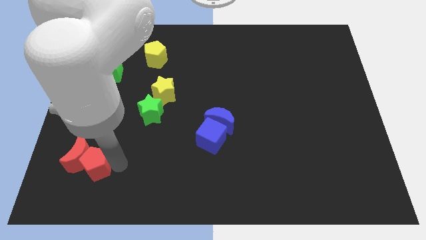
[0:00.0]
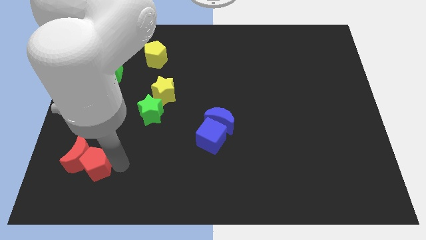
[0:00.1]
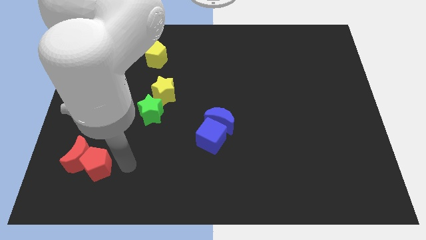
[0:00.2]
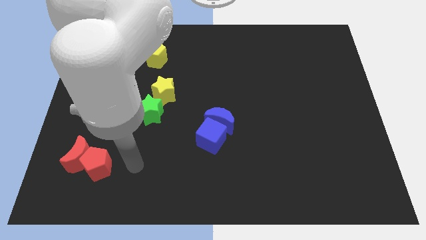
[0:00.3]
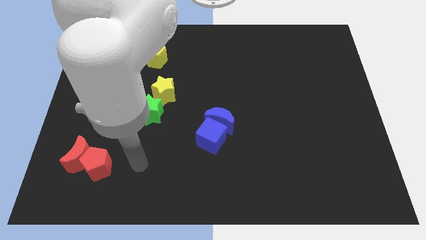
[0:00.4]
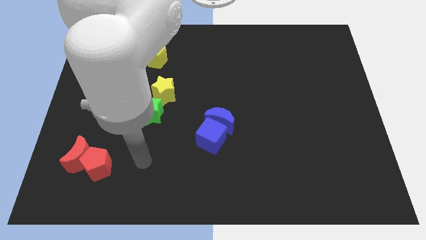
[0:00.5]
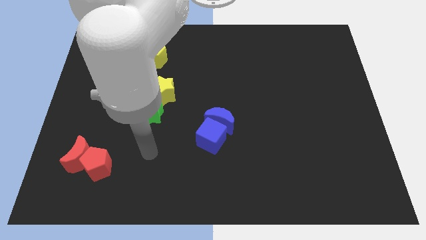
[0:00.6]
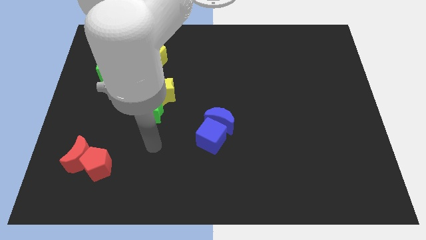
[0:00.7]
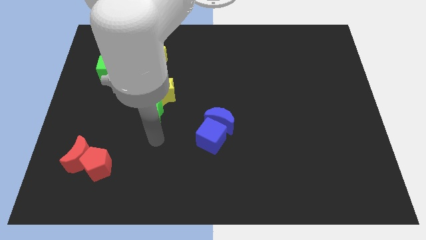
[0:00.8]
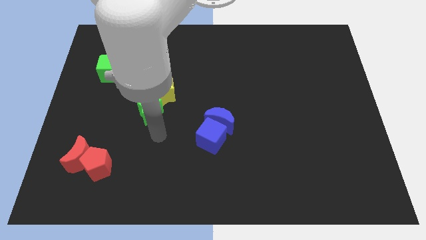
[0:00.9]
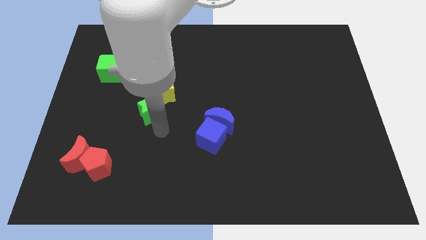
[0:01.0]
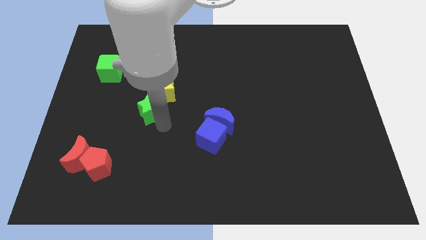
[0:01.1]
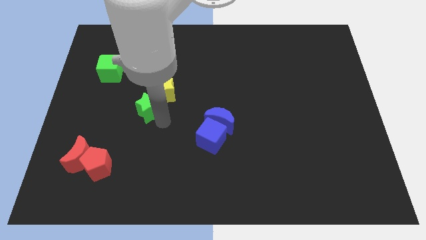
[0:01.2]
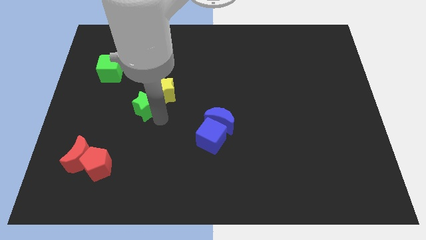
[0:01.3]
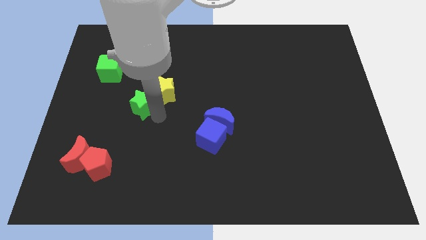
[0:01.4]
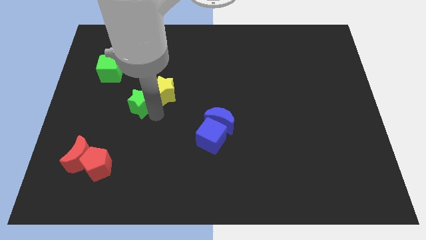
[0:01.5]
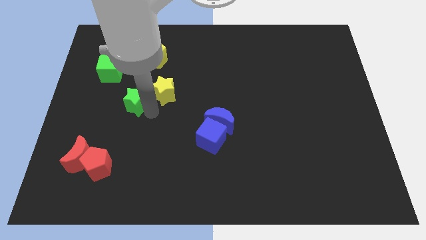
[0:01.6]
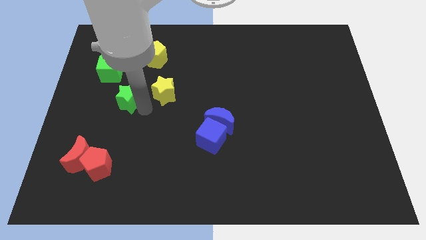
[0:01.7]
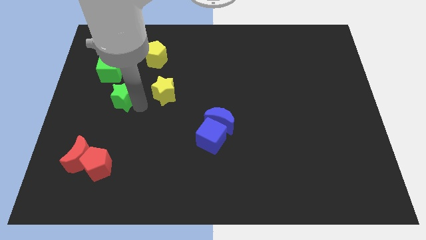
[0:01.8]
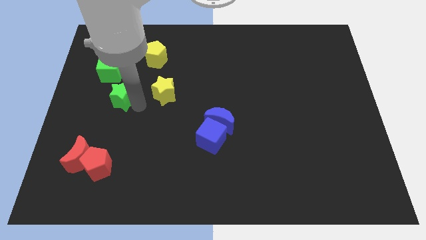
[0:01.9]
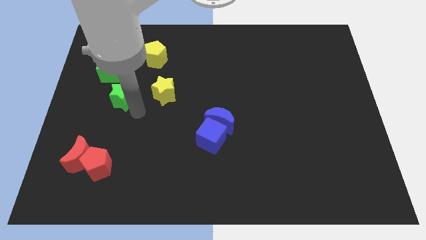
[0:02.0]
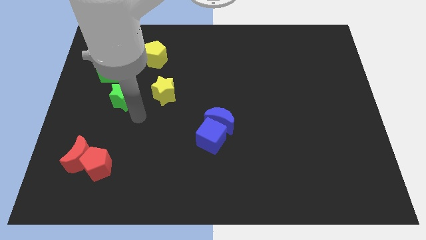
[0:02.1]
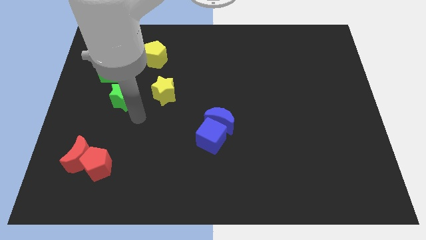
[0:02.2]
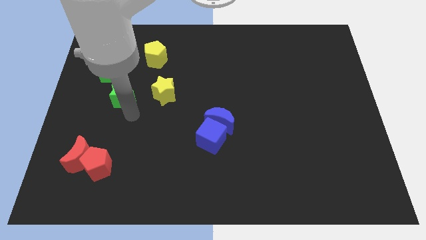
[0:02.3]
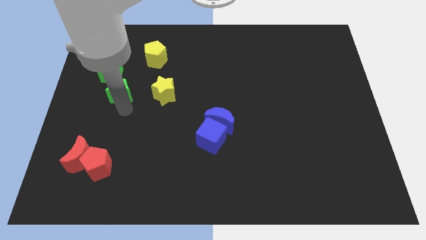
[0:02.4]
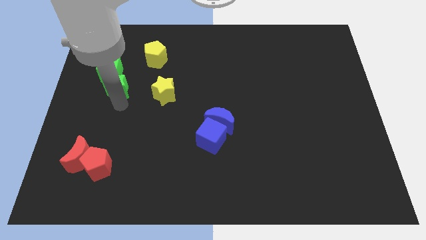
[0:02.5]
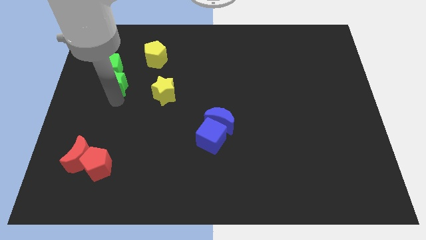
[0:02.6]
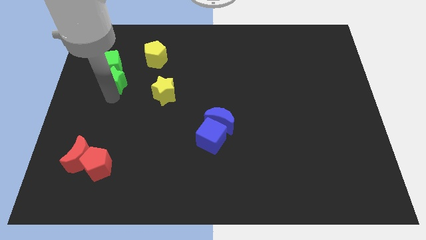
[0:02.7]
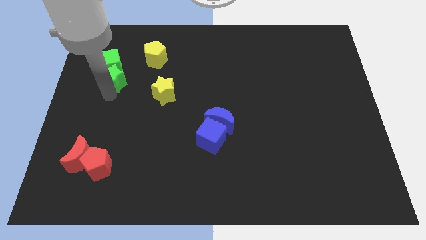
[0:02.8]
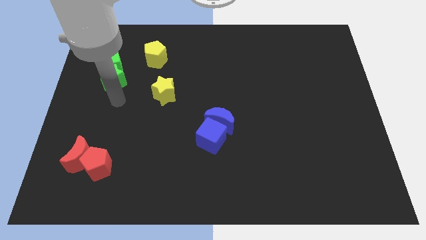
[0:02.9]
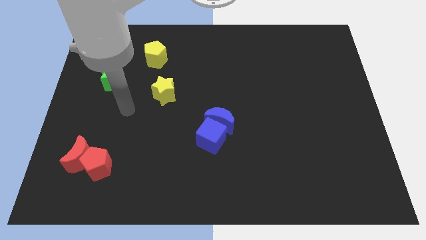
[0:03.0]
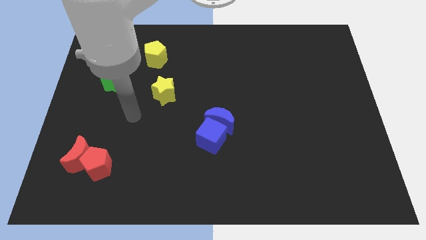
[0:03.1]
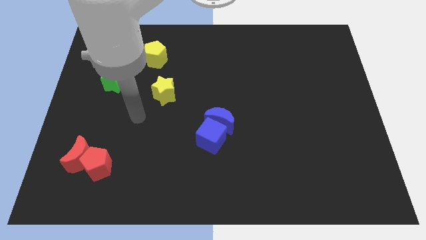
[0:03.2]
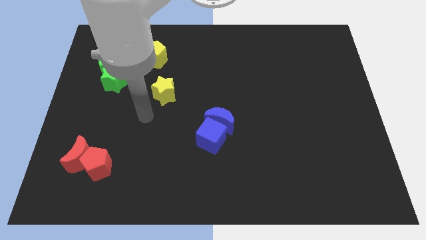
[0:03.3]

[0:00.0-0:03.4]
push the green star into the green cube

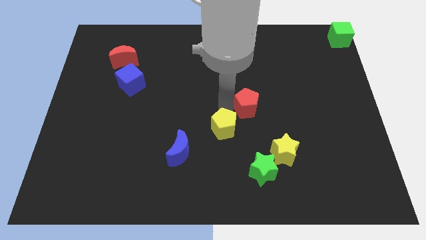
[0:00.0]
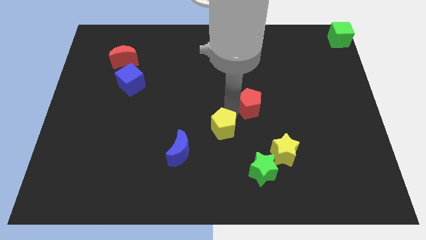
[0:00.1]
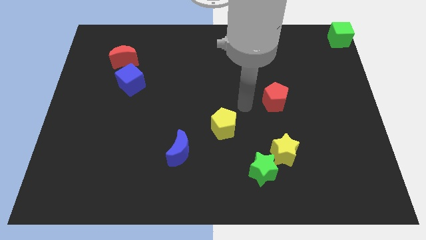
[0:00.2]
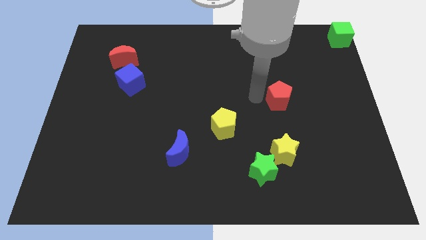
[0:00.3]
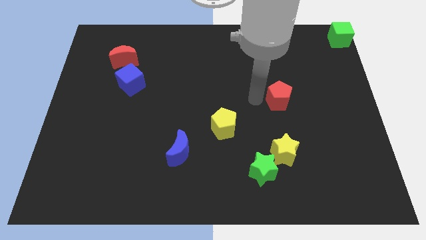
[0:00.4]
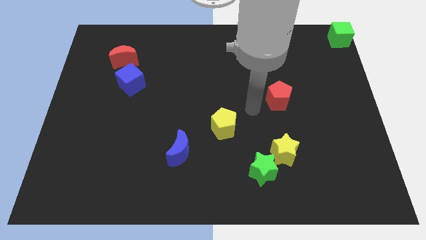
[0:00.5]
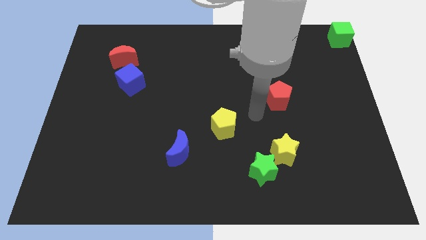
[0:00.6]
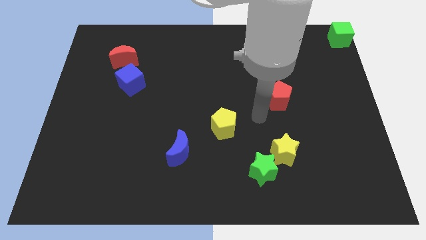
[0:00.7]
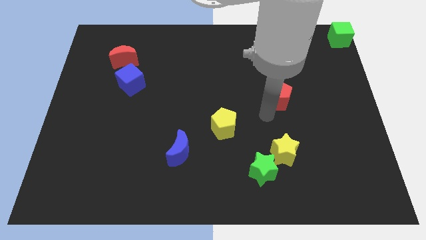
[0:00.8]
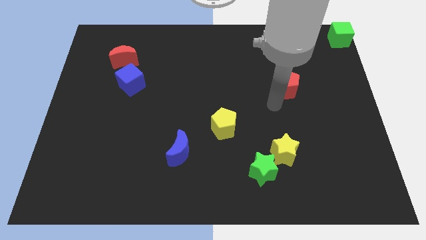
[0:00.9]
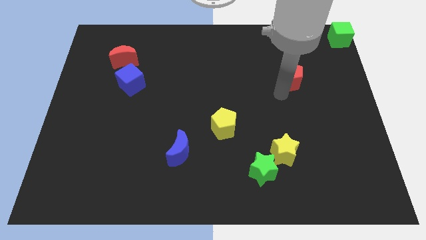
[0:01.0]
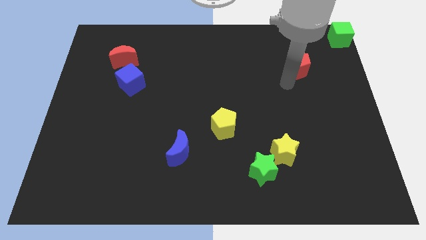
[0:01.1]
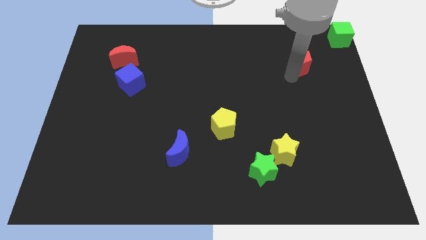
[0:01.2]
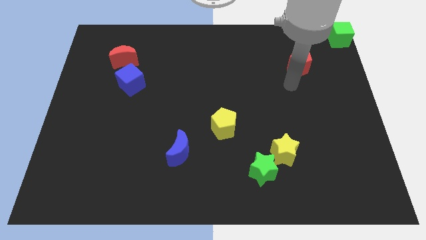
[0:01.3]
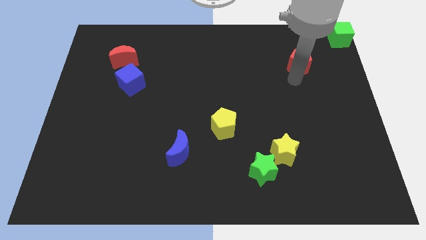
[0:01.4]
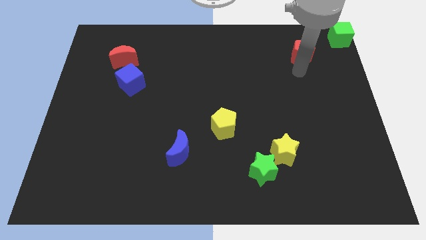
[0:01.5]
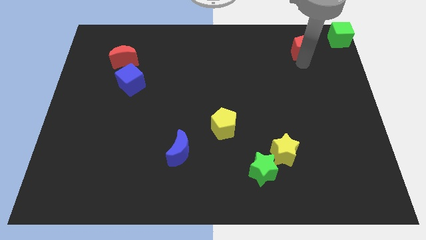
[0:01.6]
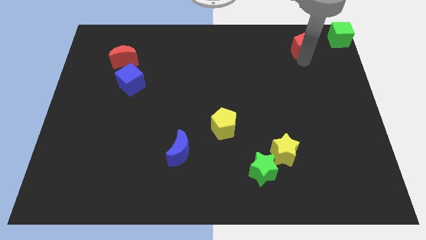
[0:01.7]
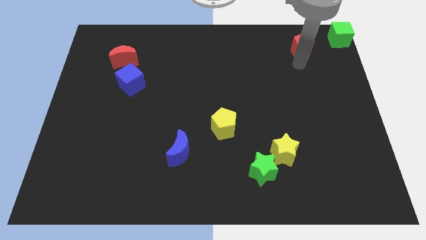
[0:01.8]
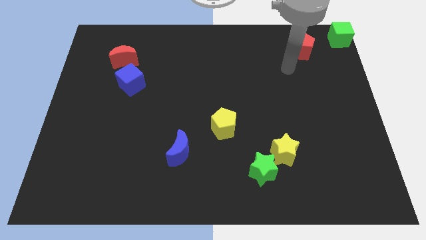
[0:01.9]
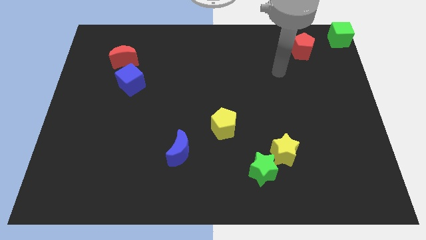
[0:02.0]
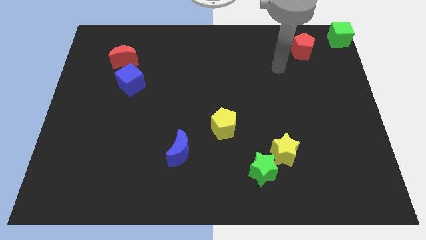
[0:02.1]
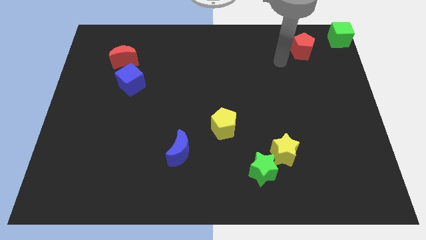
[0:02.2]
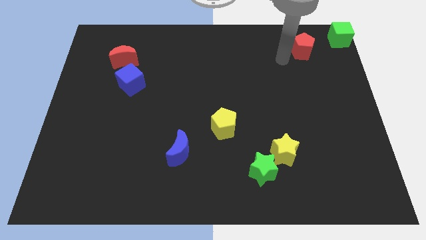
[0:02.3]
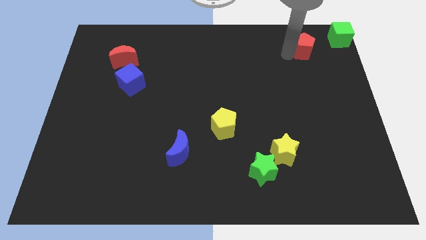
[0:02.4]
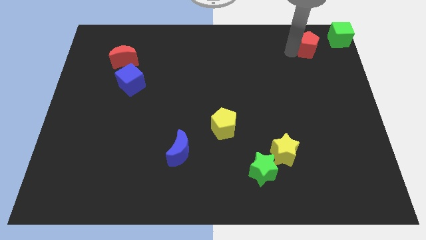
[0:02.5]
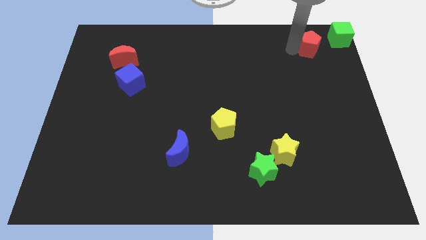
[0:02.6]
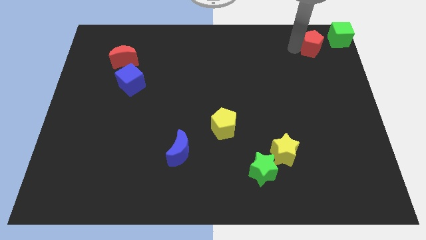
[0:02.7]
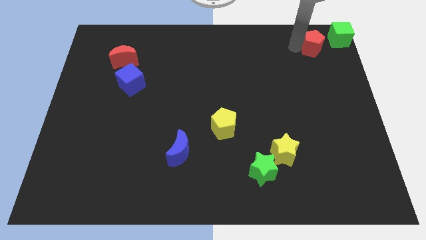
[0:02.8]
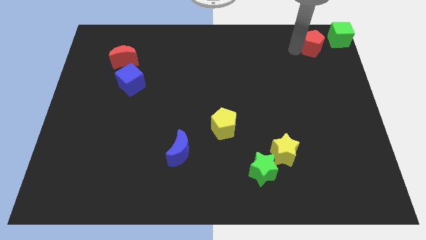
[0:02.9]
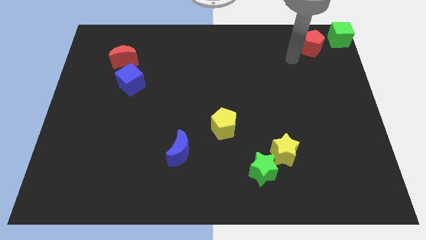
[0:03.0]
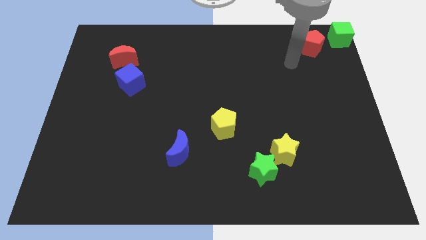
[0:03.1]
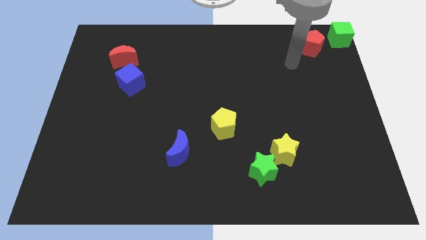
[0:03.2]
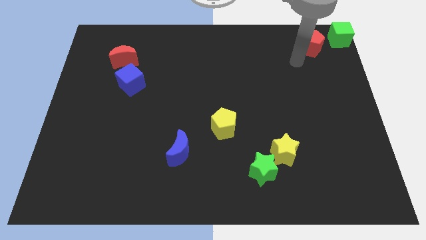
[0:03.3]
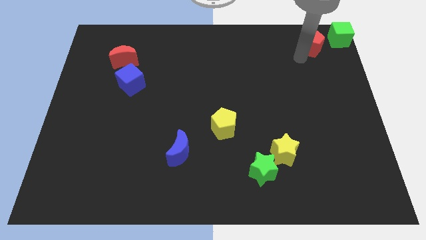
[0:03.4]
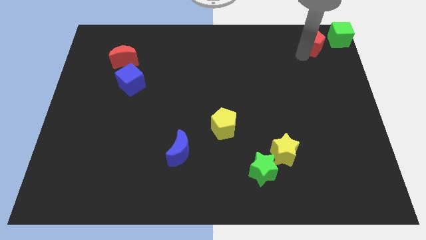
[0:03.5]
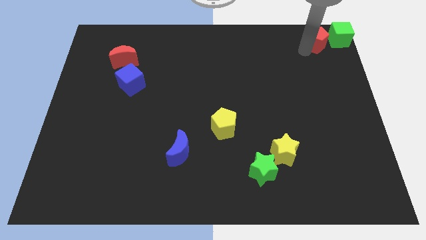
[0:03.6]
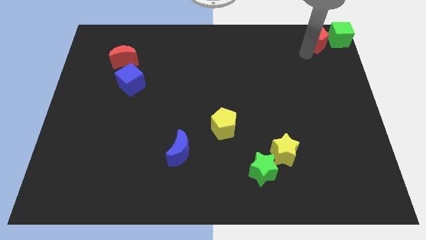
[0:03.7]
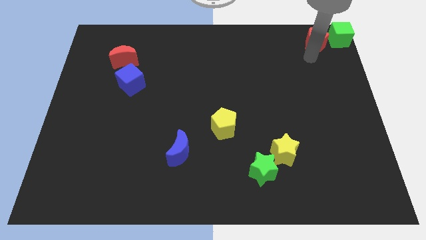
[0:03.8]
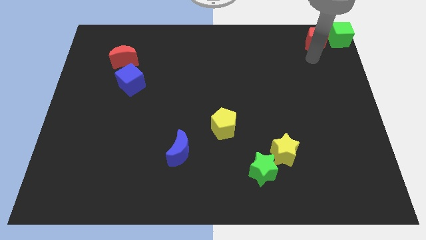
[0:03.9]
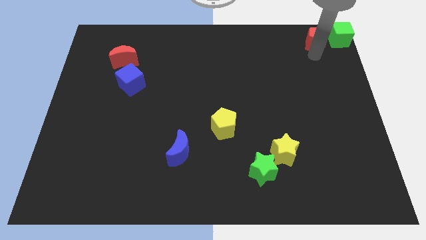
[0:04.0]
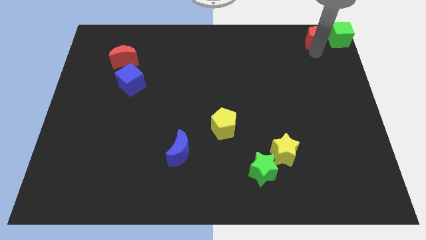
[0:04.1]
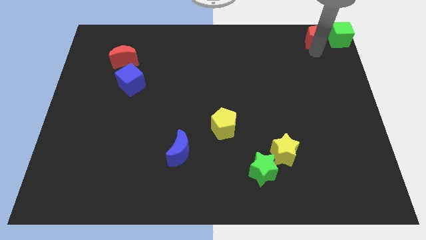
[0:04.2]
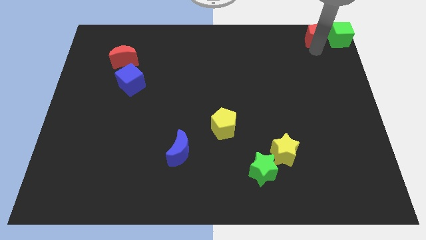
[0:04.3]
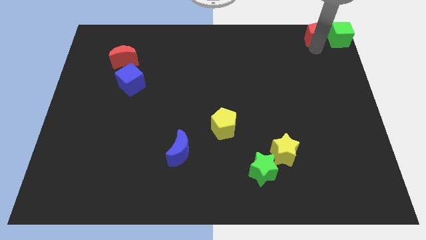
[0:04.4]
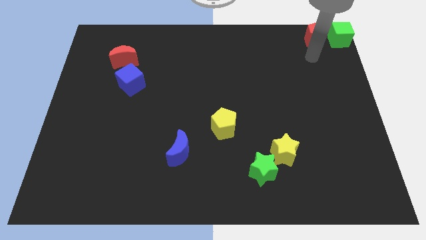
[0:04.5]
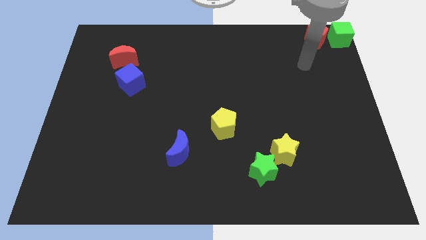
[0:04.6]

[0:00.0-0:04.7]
push the red pentagon to the left of the green cube

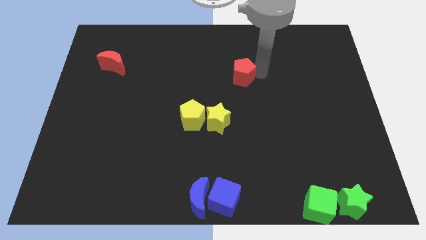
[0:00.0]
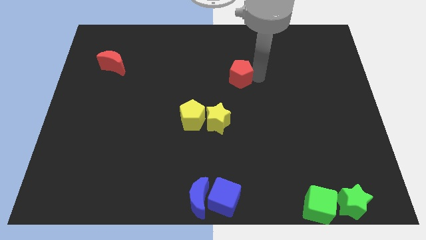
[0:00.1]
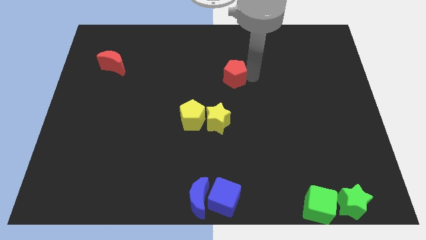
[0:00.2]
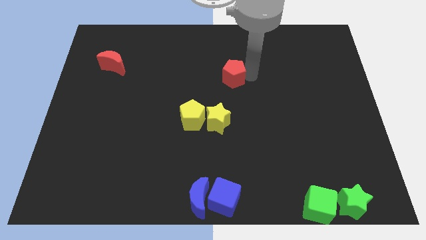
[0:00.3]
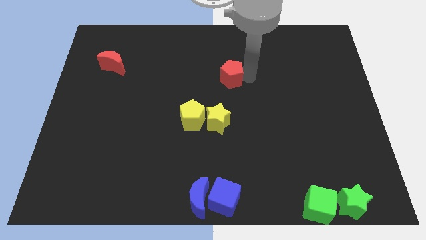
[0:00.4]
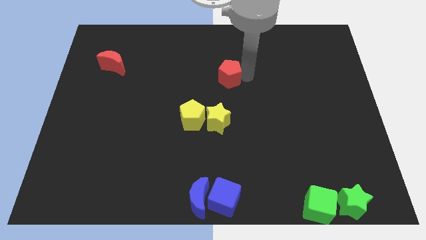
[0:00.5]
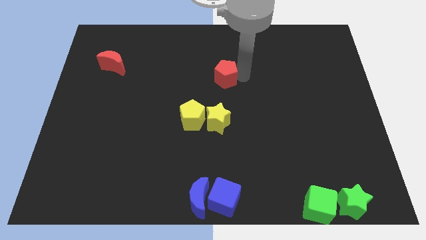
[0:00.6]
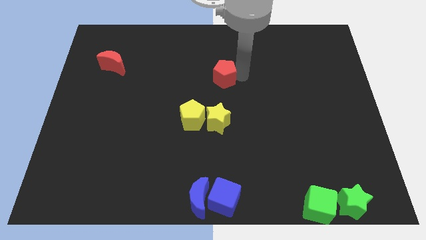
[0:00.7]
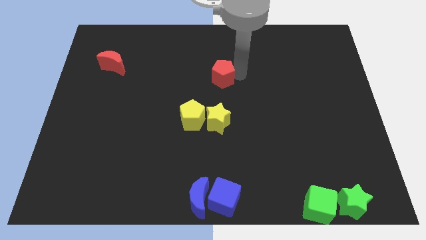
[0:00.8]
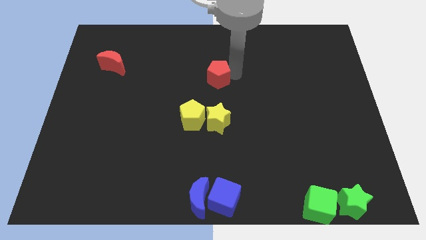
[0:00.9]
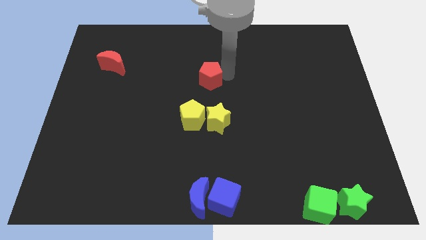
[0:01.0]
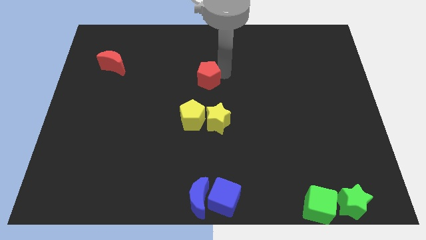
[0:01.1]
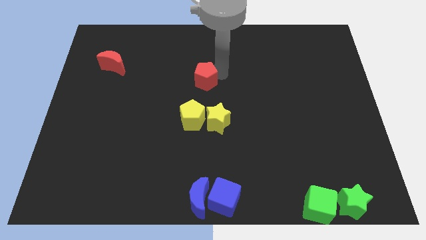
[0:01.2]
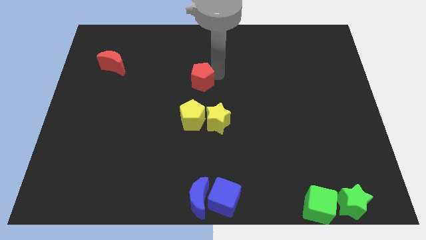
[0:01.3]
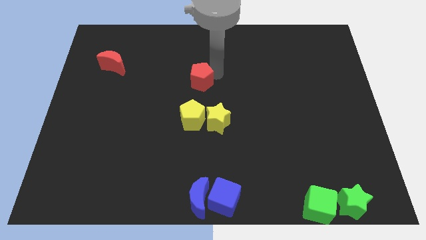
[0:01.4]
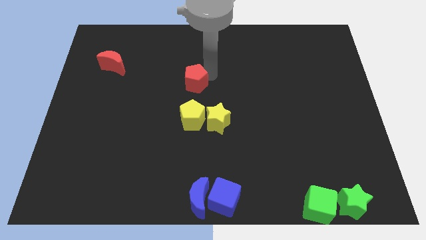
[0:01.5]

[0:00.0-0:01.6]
place the red pentagon above the yellow pentagon
